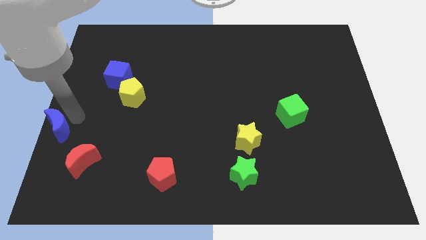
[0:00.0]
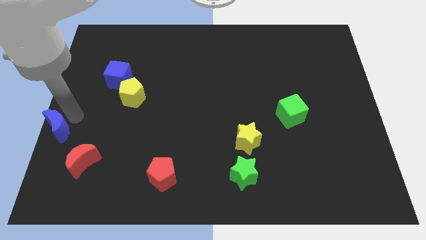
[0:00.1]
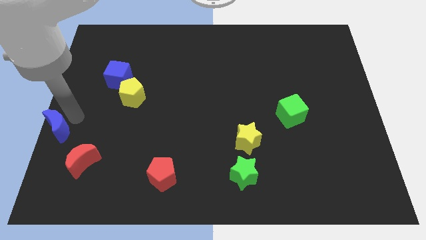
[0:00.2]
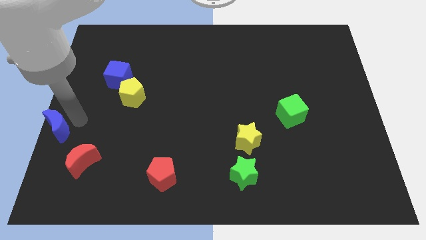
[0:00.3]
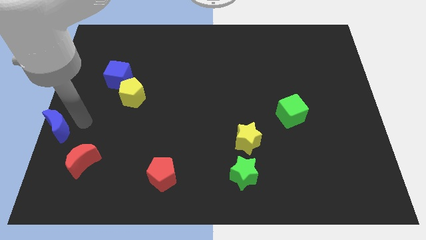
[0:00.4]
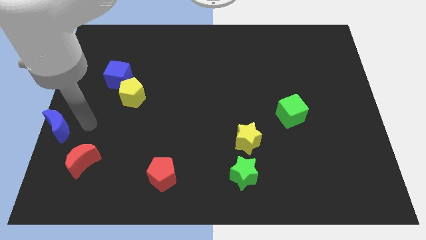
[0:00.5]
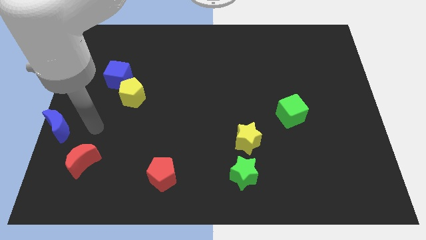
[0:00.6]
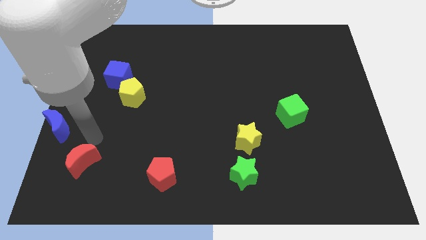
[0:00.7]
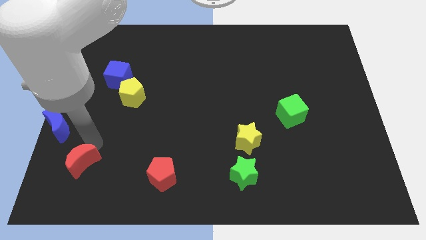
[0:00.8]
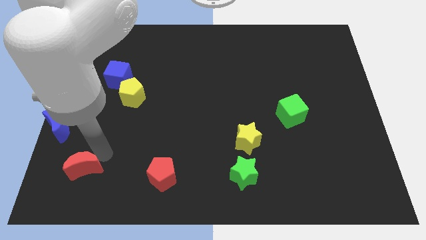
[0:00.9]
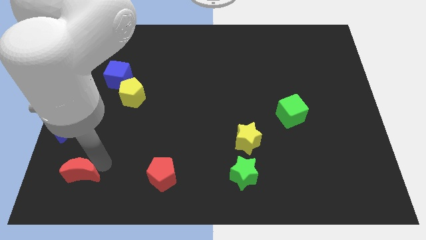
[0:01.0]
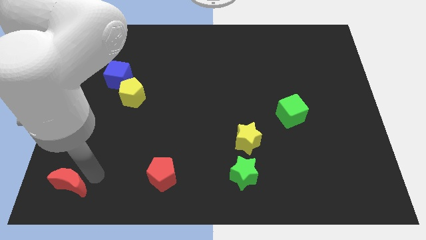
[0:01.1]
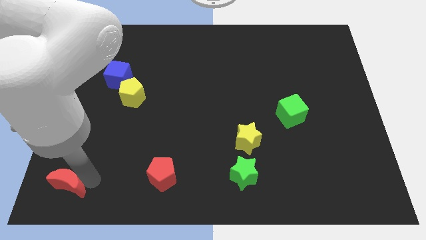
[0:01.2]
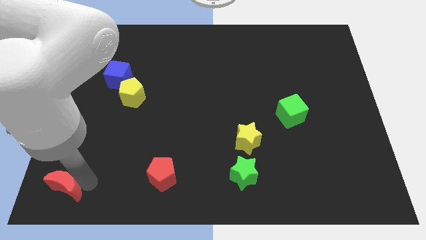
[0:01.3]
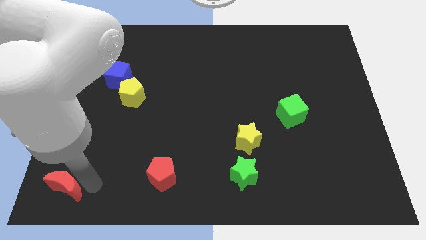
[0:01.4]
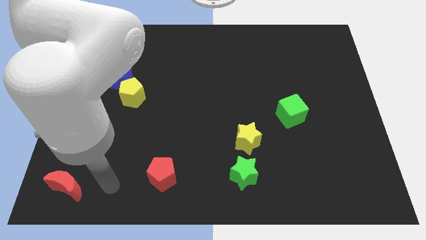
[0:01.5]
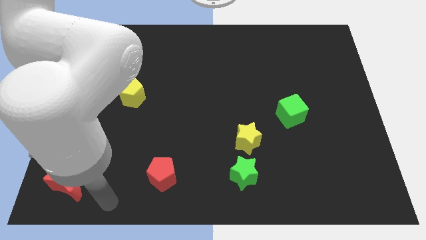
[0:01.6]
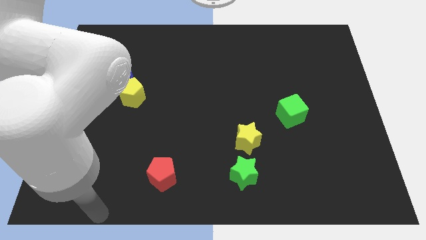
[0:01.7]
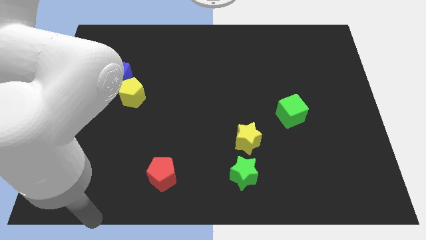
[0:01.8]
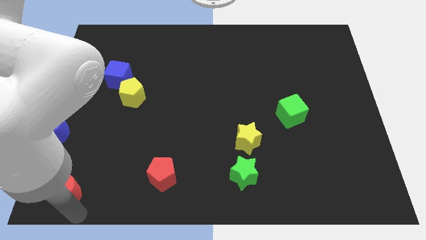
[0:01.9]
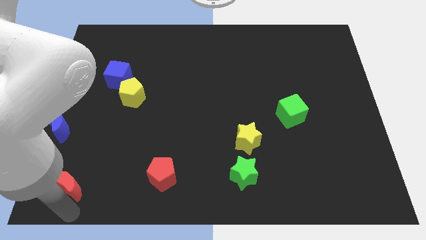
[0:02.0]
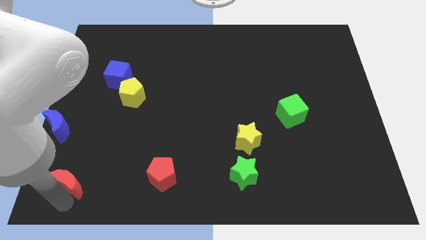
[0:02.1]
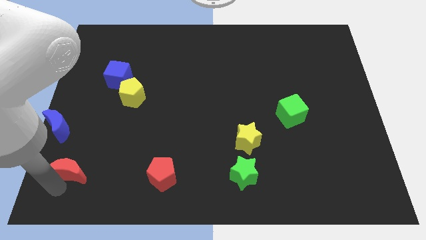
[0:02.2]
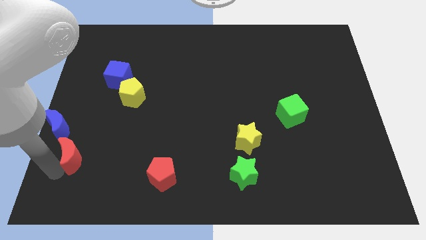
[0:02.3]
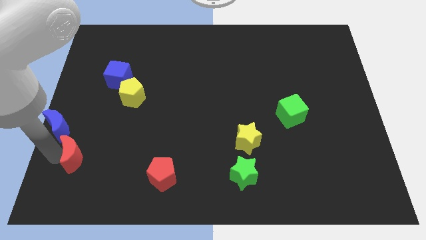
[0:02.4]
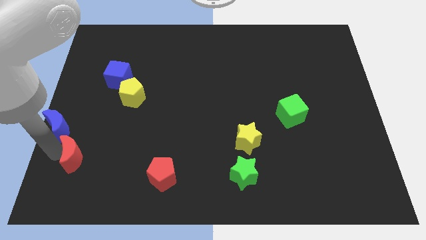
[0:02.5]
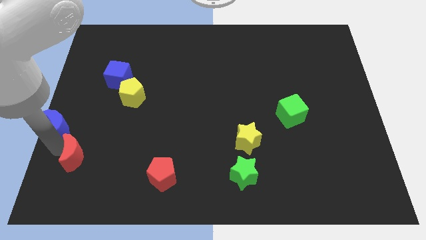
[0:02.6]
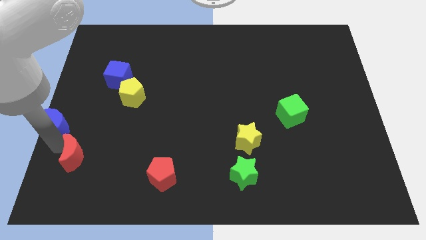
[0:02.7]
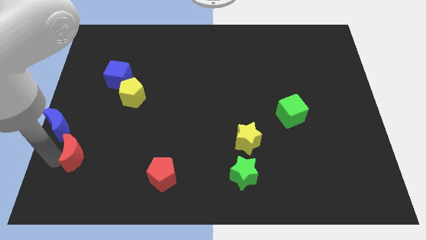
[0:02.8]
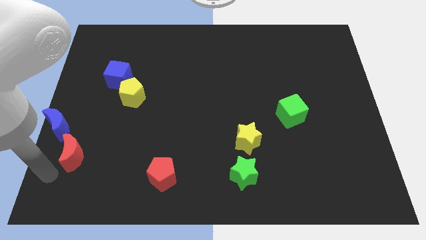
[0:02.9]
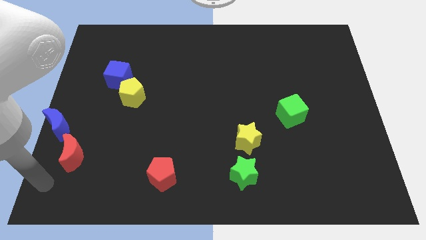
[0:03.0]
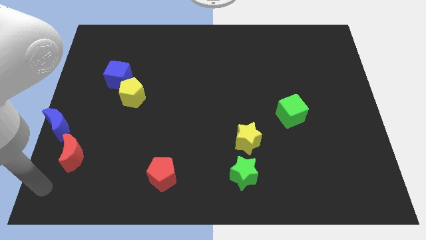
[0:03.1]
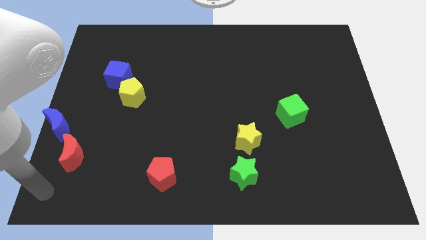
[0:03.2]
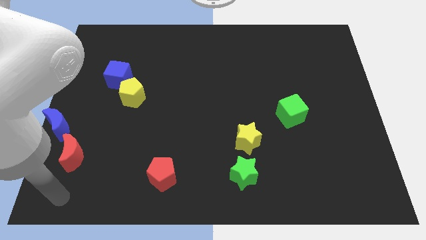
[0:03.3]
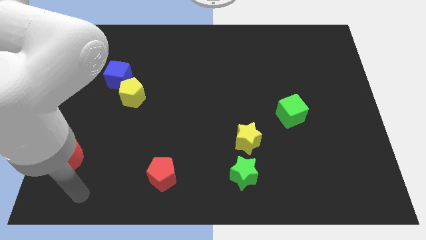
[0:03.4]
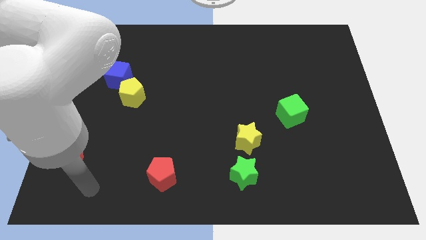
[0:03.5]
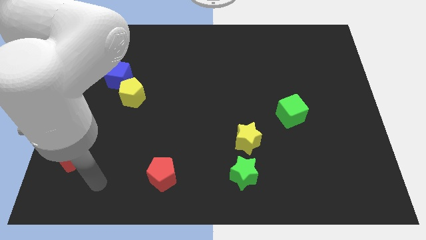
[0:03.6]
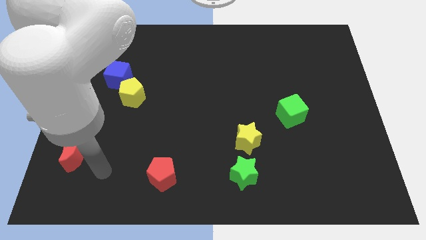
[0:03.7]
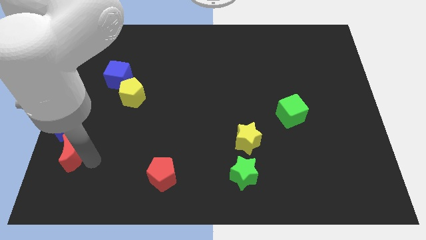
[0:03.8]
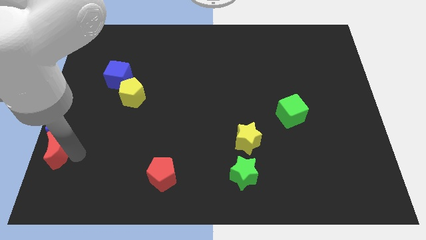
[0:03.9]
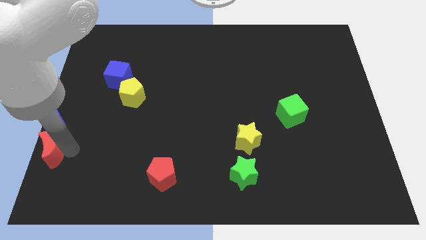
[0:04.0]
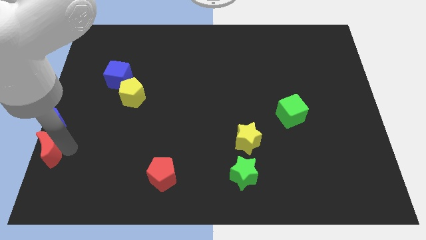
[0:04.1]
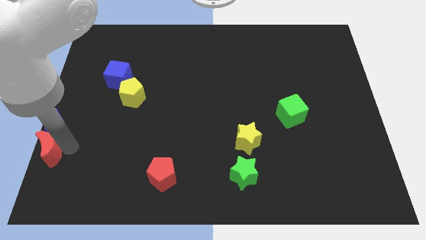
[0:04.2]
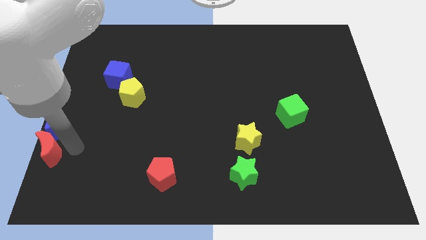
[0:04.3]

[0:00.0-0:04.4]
push the red crescent to the bottom of the blue crescent

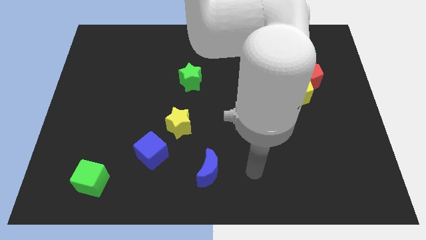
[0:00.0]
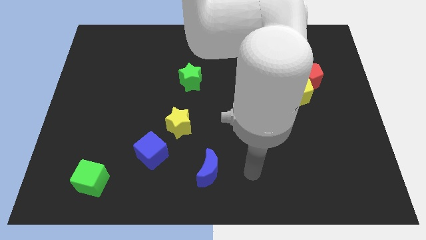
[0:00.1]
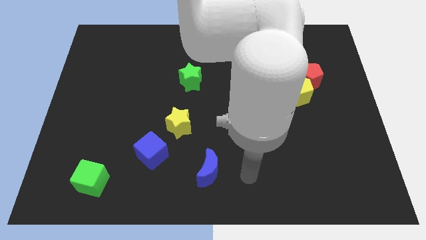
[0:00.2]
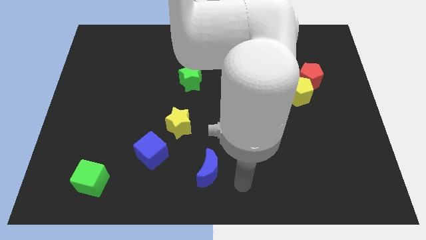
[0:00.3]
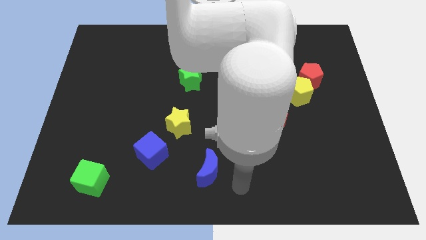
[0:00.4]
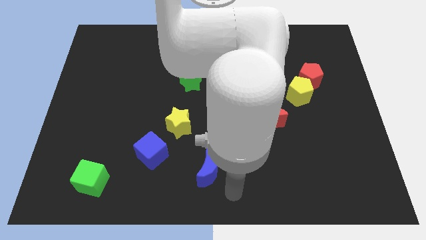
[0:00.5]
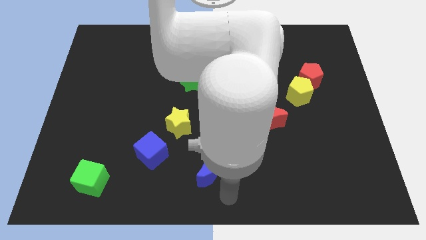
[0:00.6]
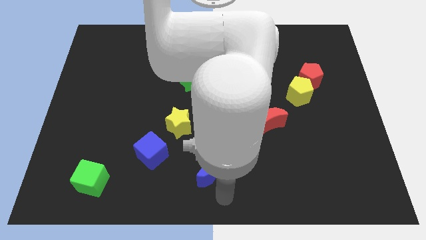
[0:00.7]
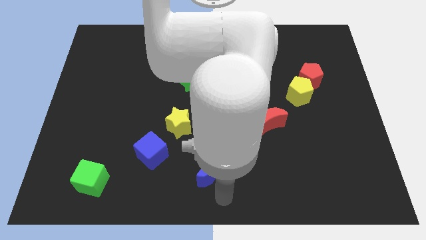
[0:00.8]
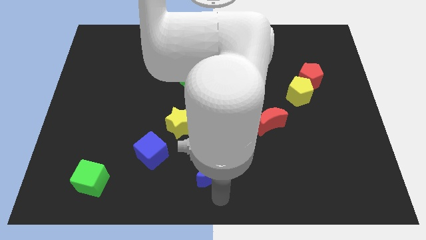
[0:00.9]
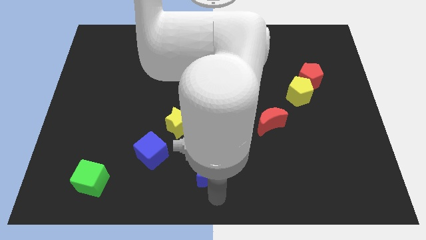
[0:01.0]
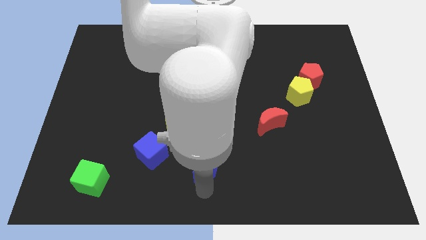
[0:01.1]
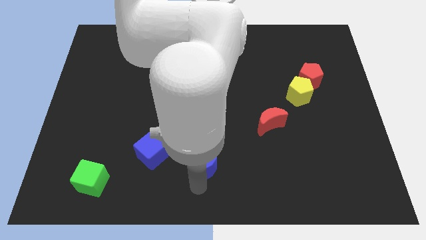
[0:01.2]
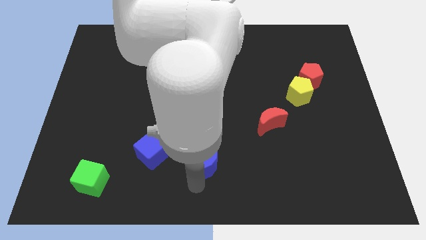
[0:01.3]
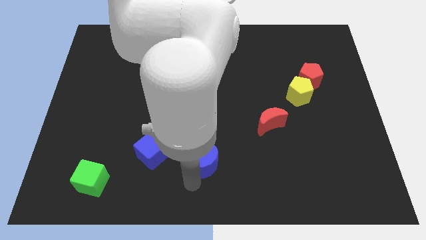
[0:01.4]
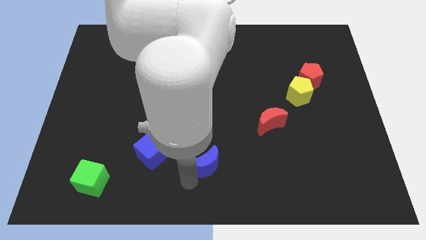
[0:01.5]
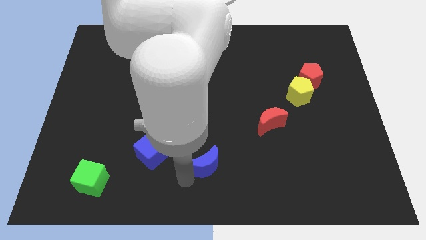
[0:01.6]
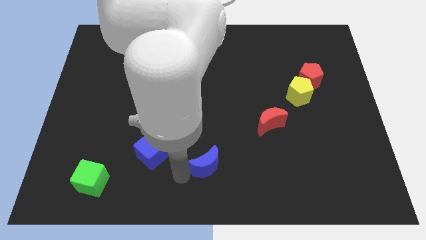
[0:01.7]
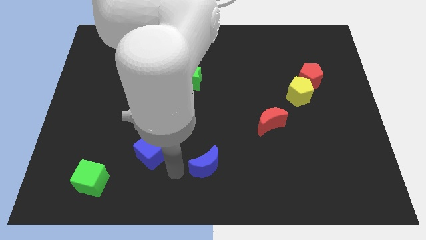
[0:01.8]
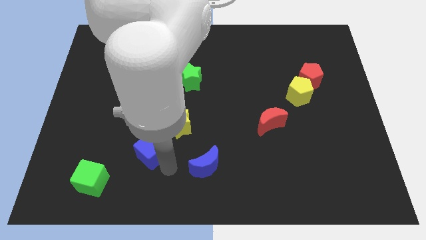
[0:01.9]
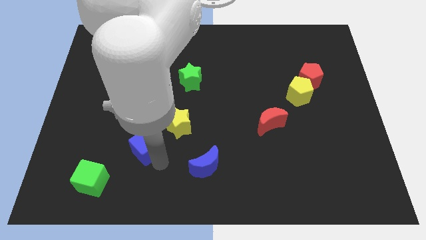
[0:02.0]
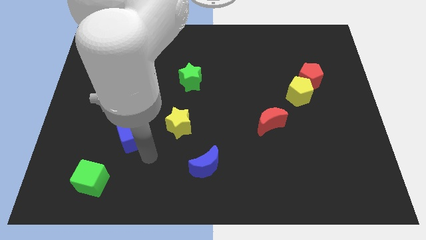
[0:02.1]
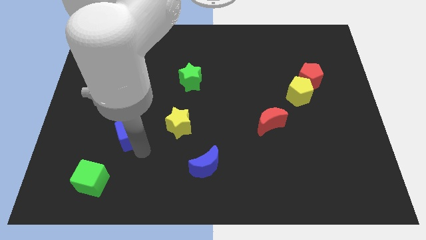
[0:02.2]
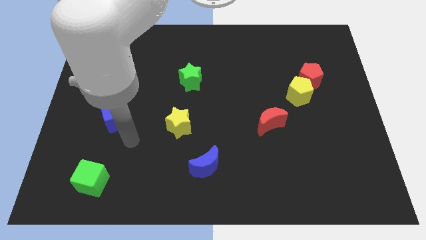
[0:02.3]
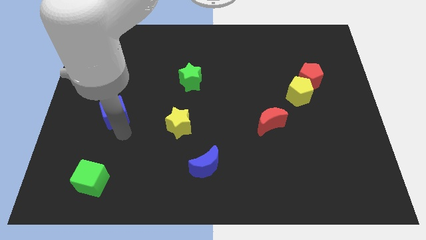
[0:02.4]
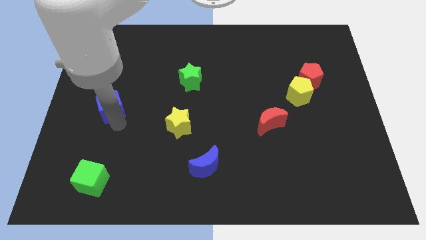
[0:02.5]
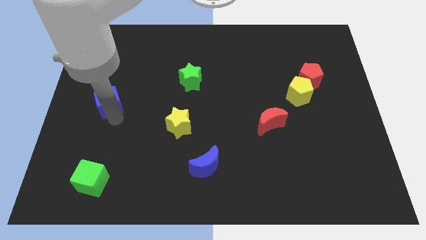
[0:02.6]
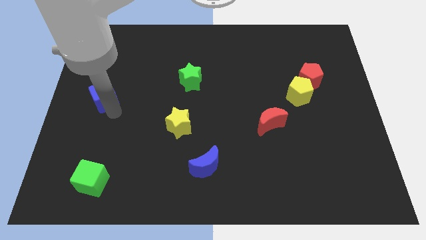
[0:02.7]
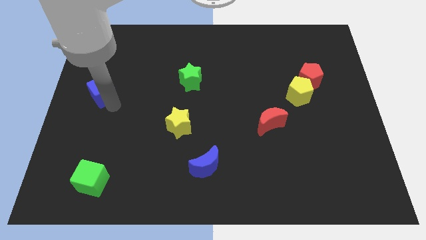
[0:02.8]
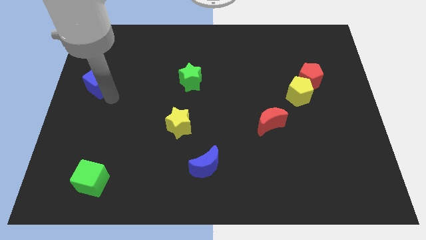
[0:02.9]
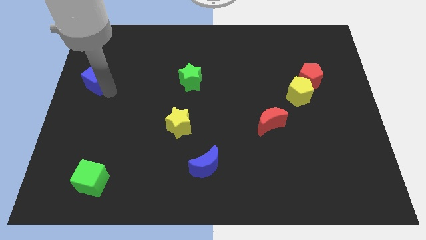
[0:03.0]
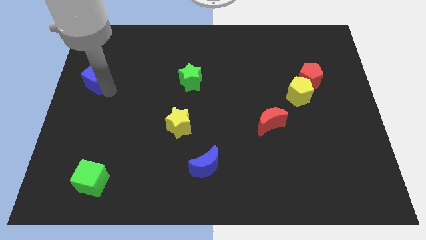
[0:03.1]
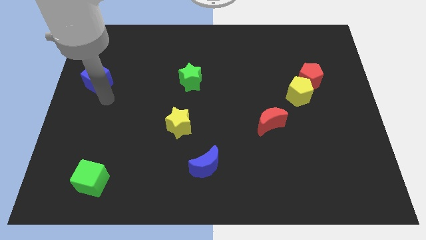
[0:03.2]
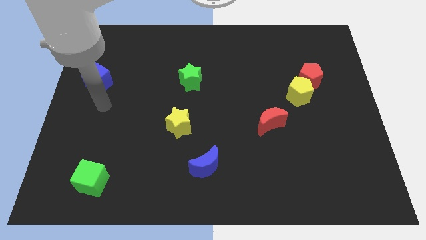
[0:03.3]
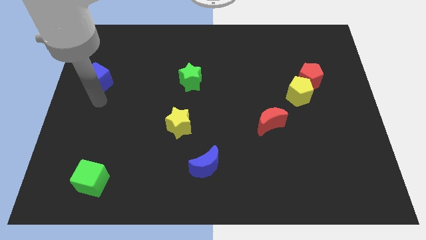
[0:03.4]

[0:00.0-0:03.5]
move the blue cube horizontally to the left side of the green star

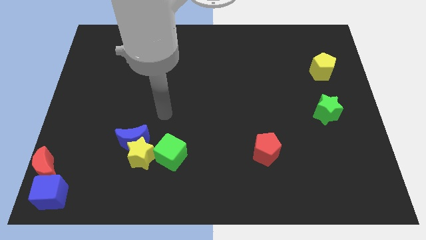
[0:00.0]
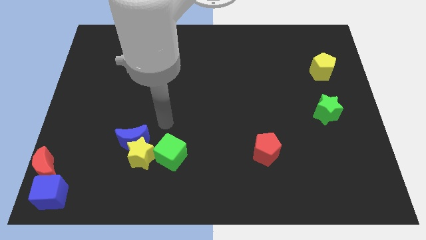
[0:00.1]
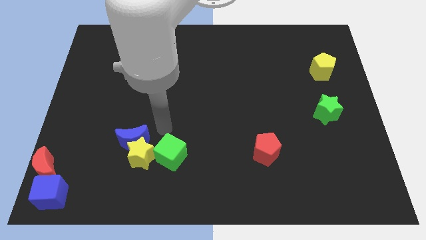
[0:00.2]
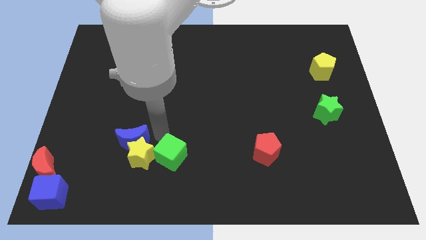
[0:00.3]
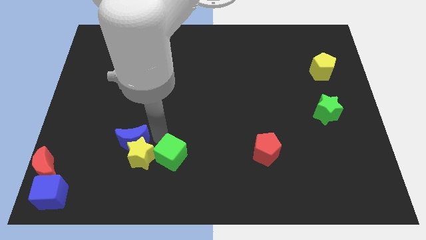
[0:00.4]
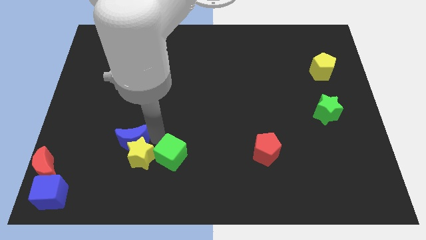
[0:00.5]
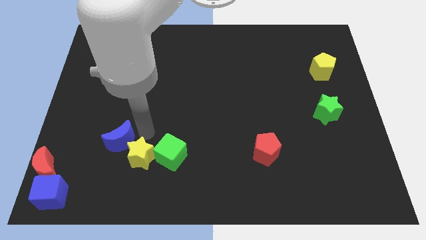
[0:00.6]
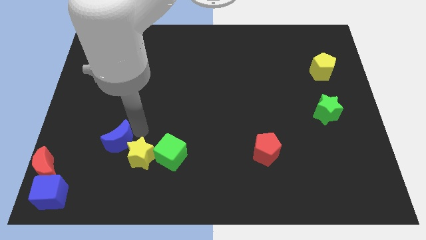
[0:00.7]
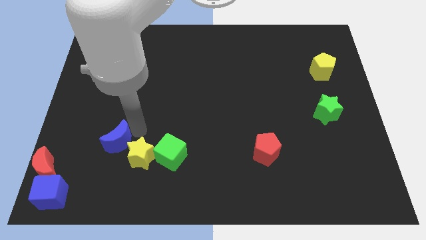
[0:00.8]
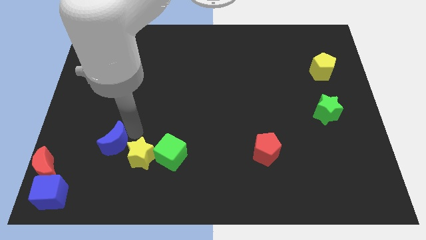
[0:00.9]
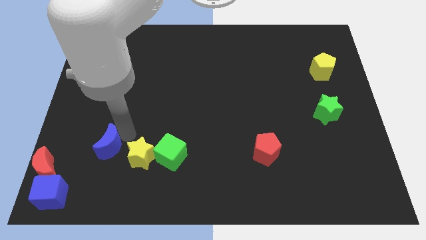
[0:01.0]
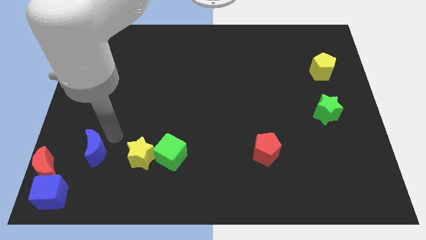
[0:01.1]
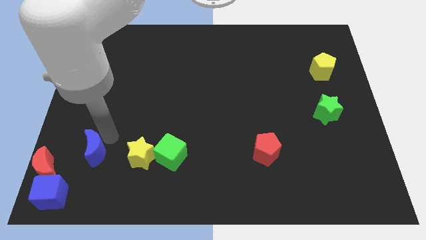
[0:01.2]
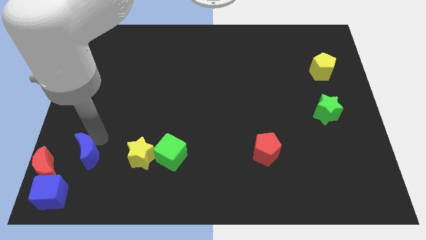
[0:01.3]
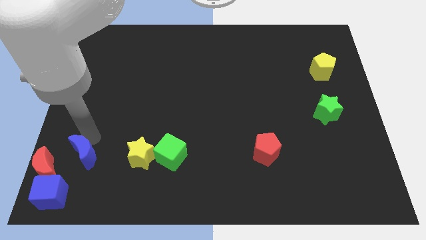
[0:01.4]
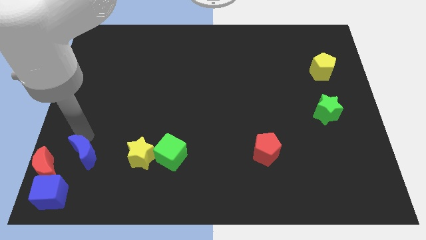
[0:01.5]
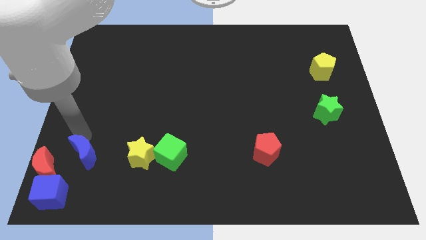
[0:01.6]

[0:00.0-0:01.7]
move the blue moon towards the right of the red moon
